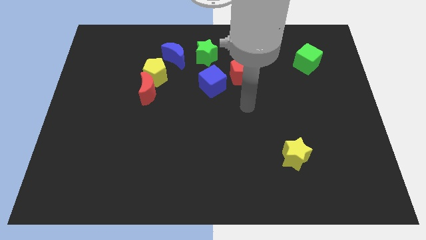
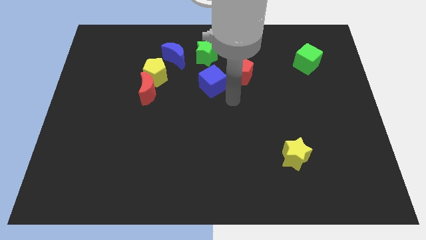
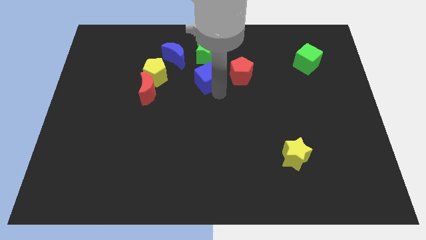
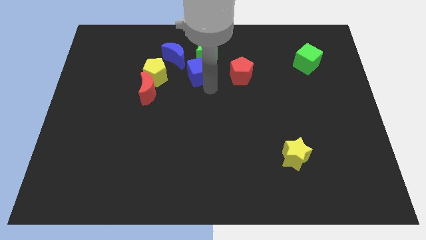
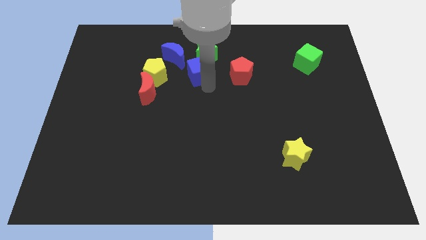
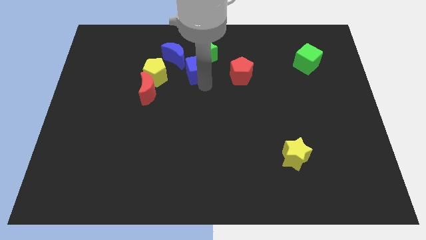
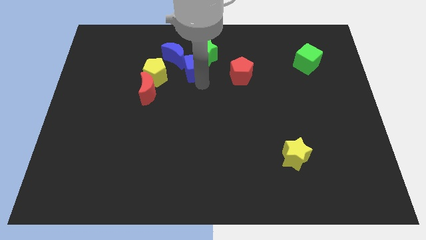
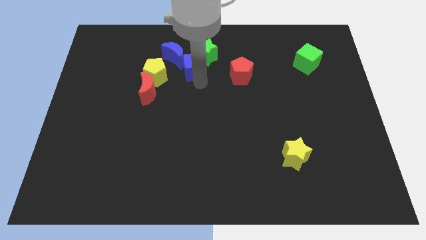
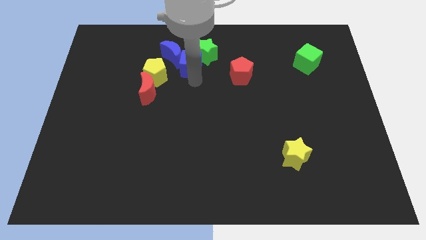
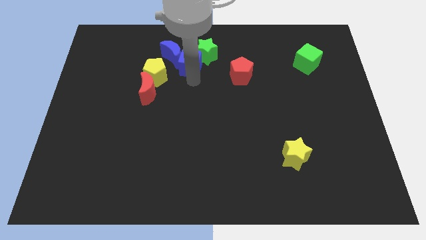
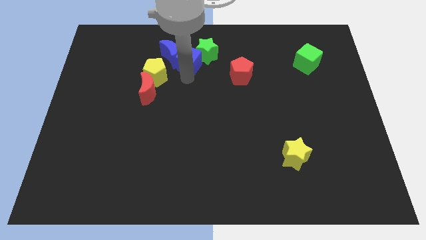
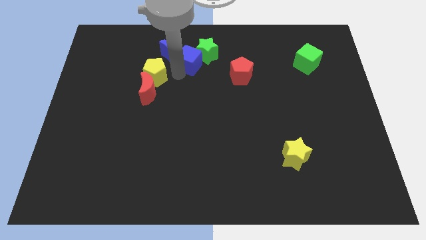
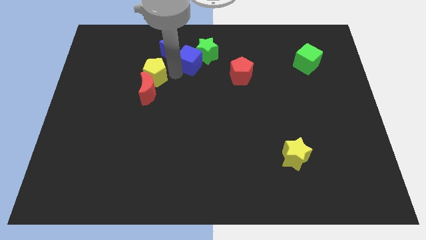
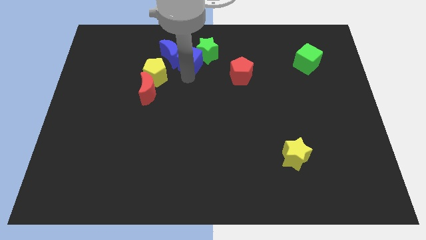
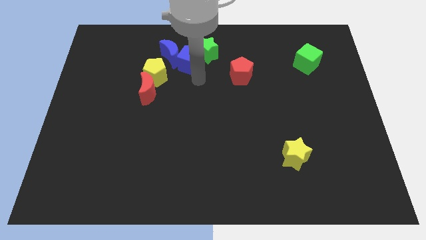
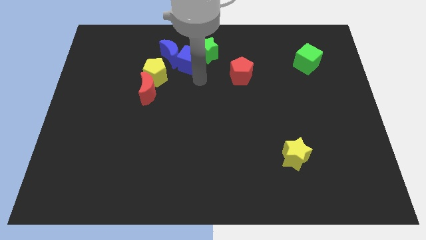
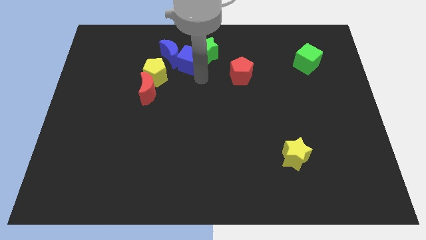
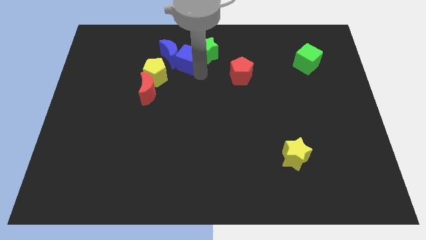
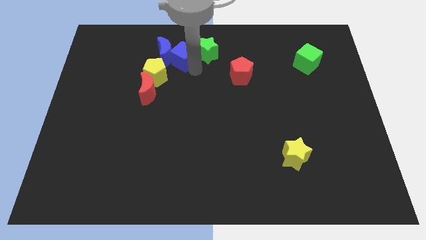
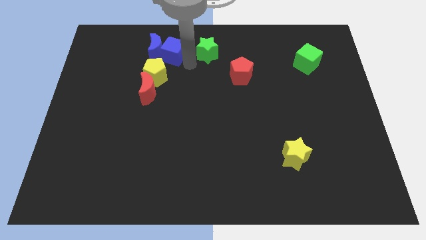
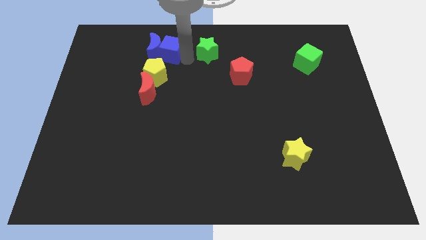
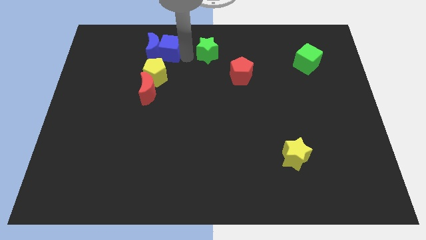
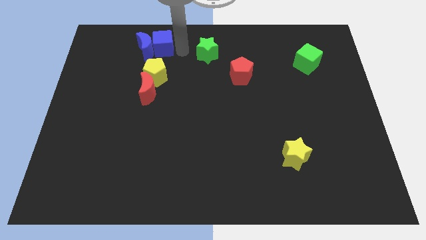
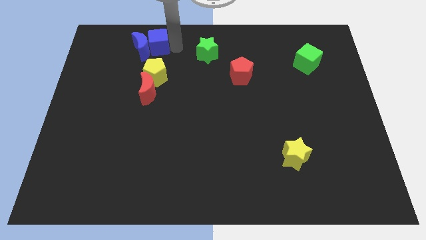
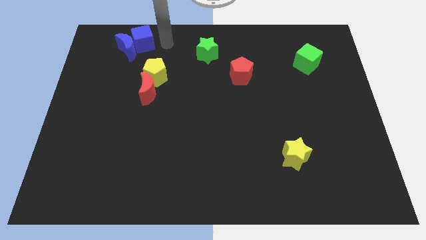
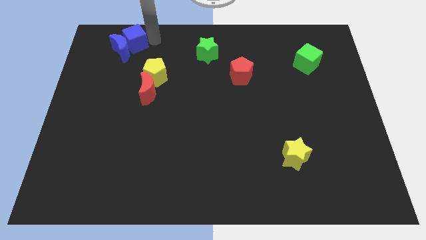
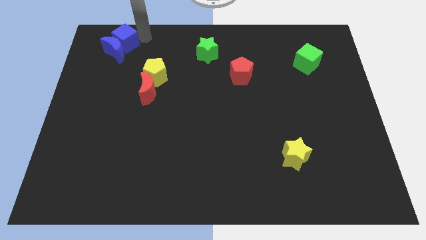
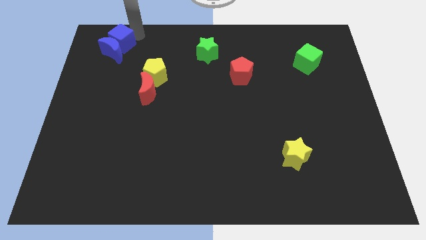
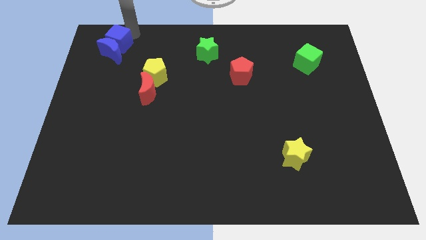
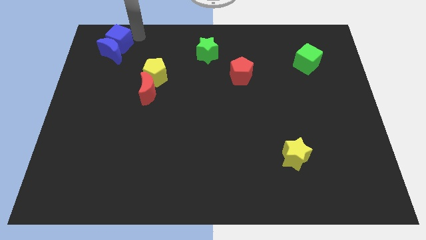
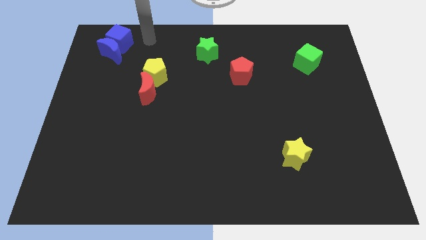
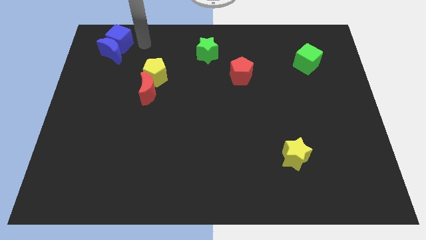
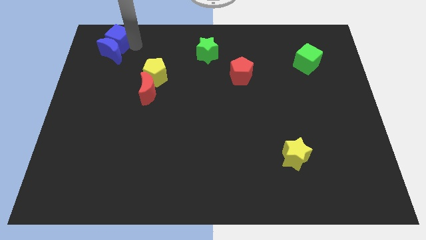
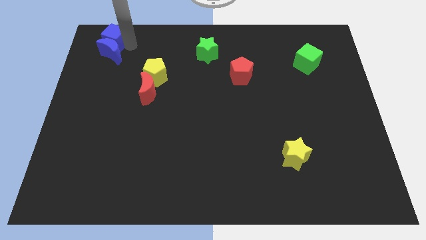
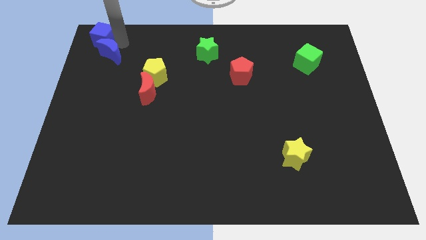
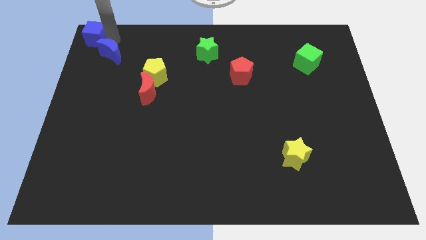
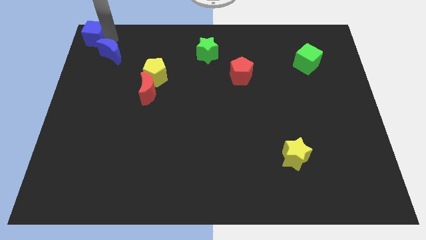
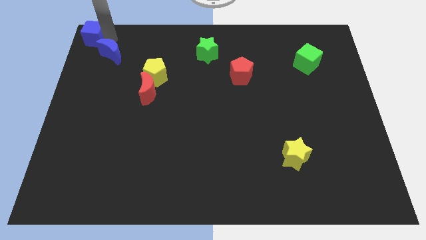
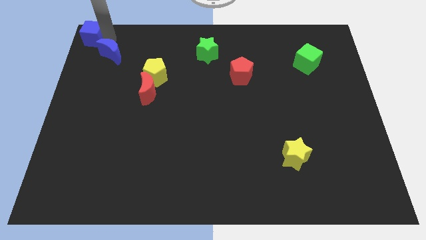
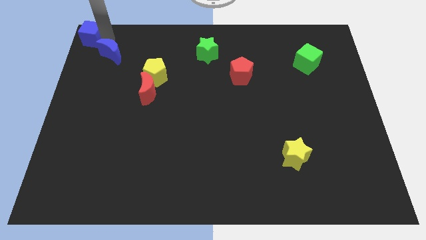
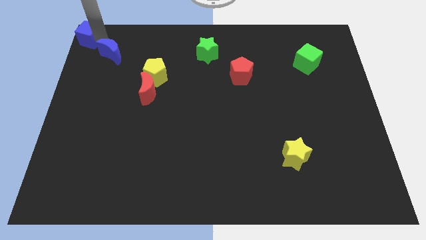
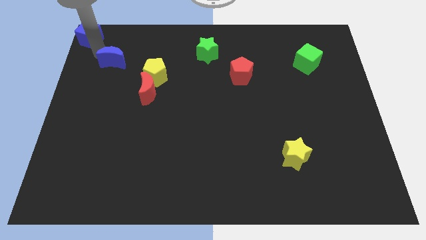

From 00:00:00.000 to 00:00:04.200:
push the blue cube to the top left to the board

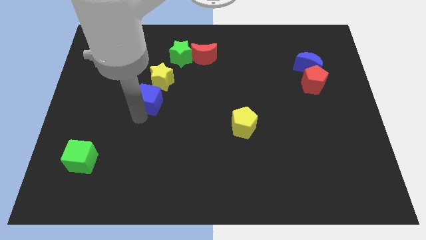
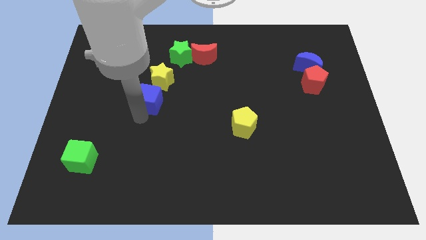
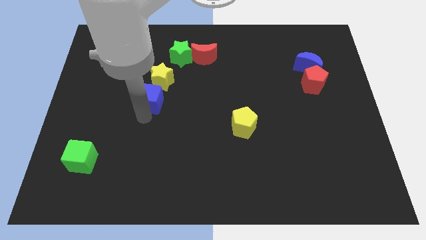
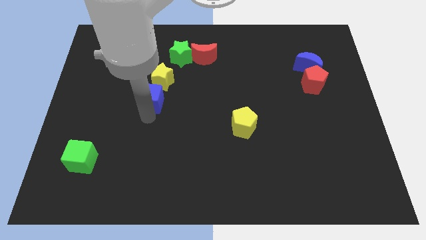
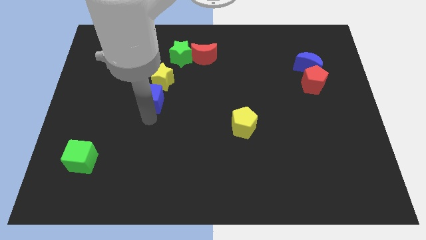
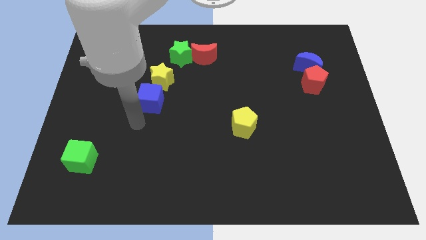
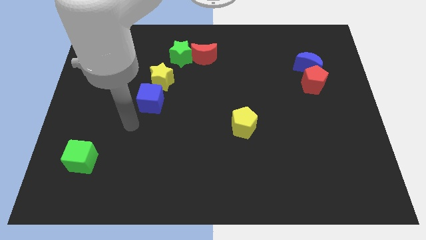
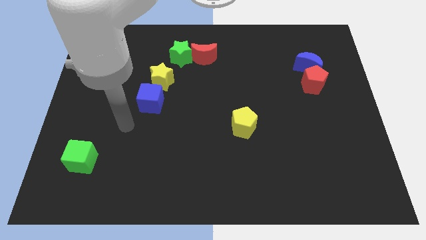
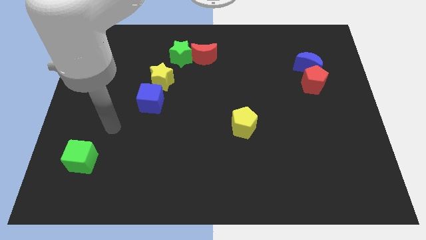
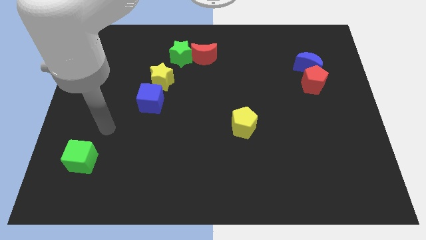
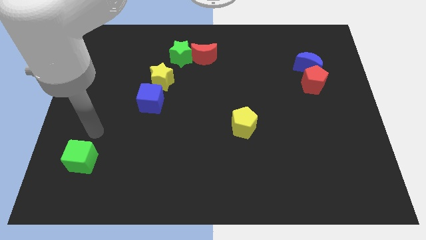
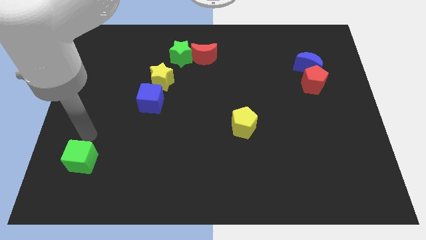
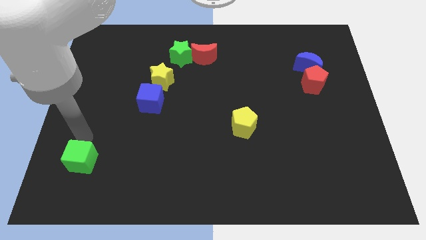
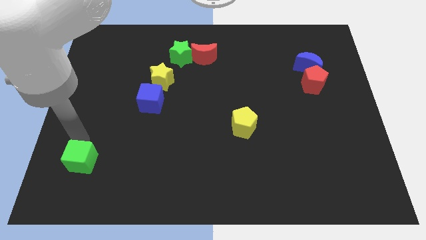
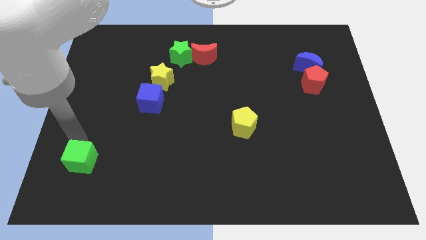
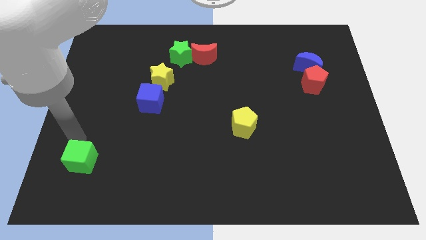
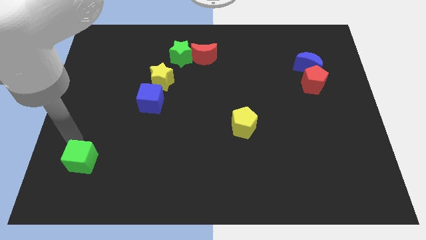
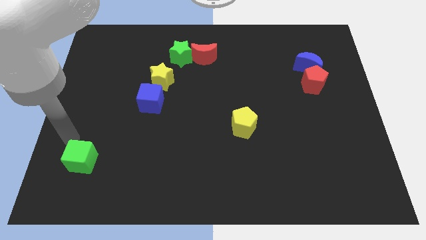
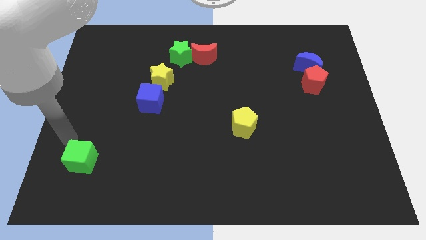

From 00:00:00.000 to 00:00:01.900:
point the arm above the green cube

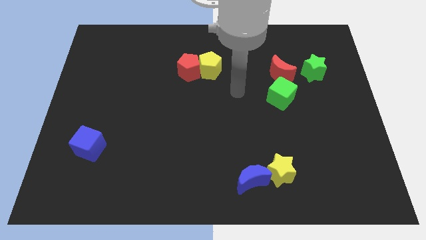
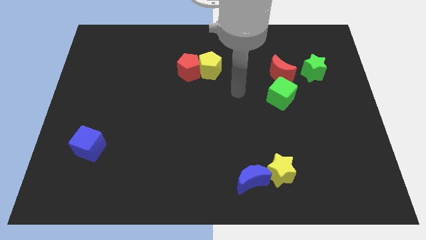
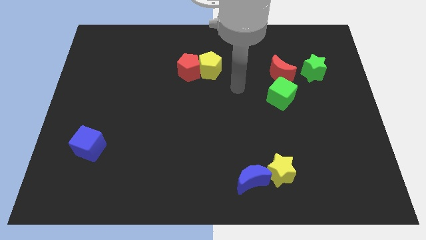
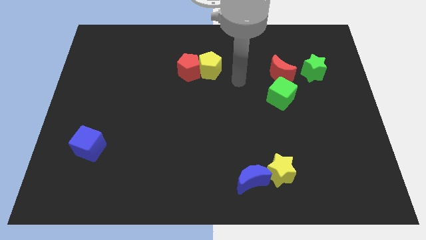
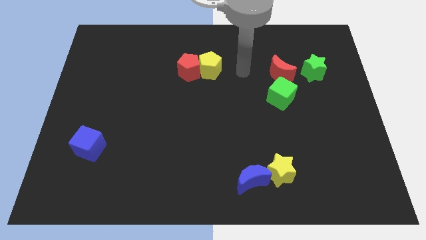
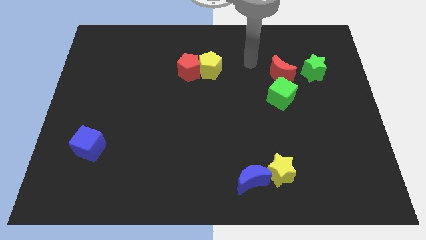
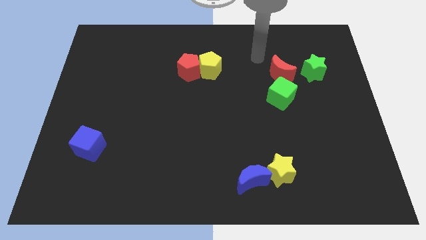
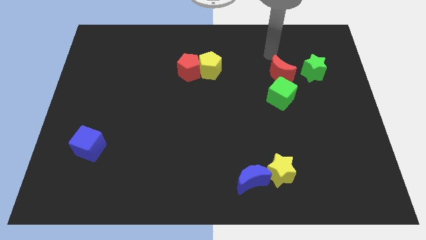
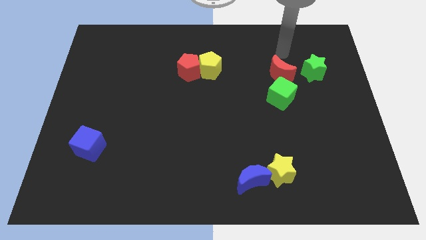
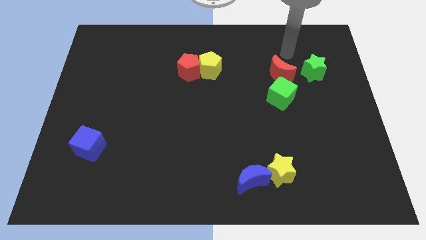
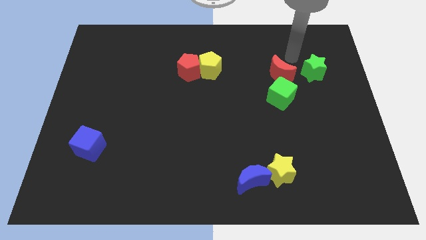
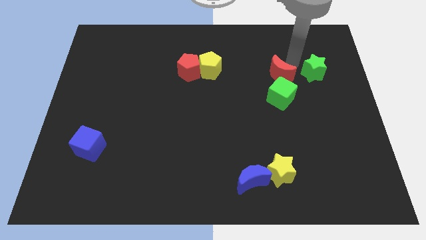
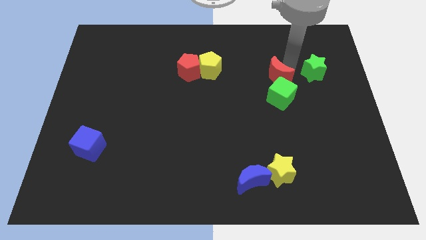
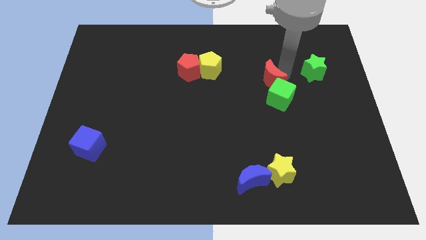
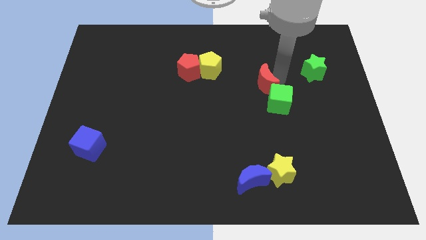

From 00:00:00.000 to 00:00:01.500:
push the red moon into the green cube

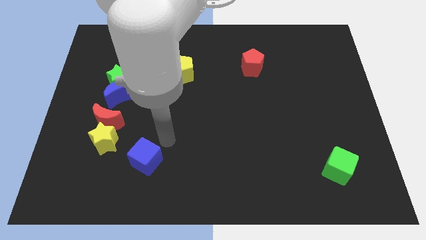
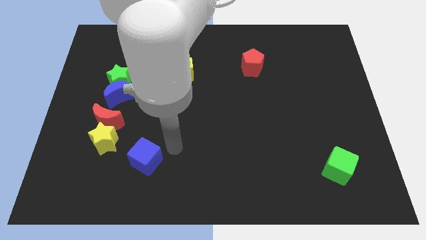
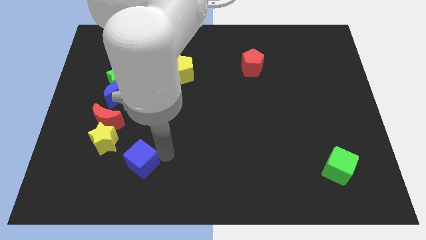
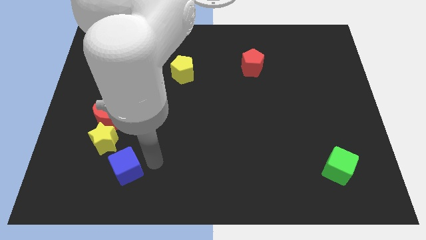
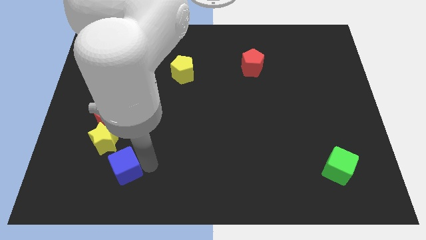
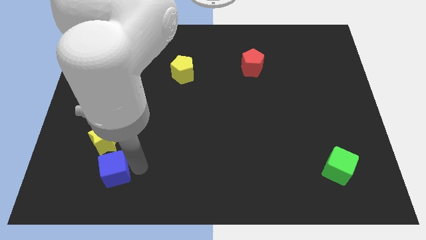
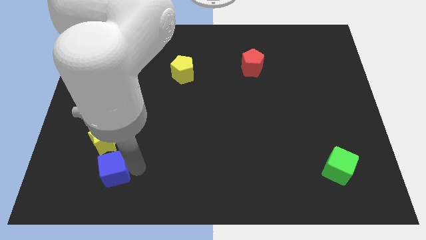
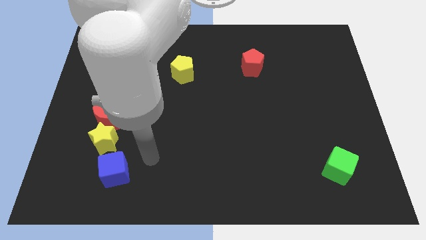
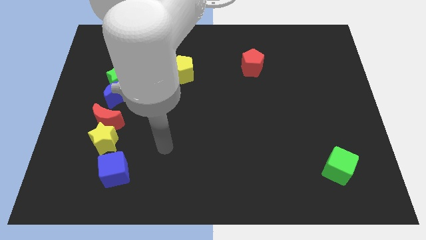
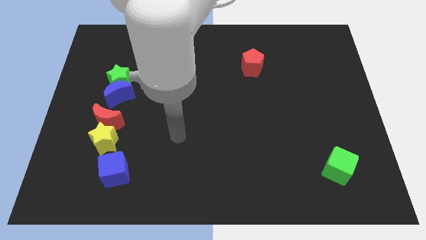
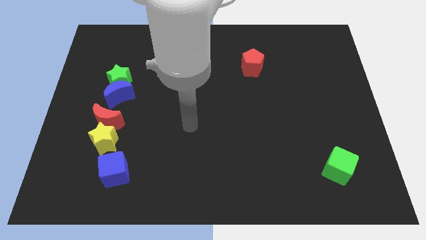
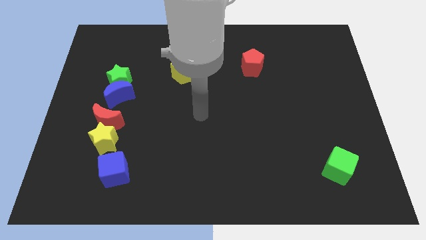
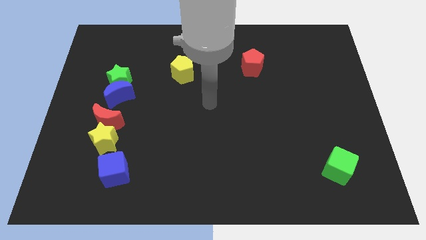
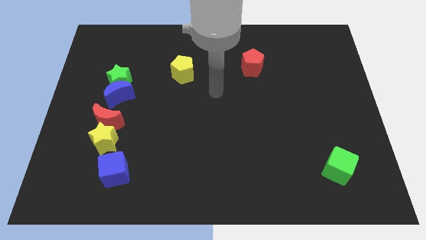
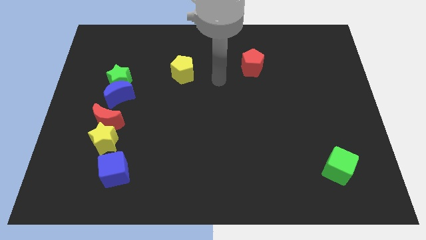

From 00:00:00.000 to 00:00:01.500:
move the blue cube to the bottom right side of the yellow star
